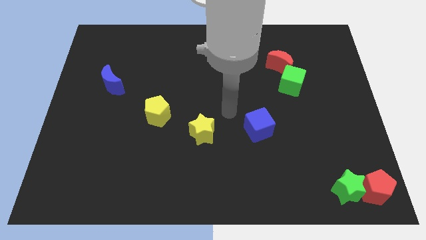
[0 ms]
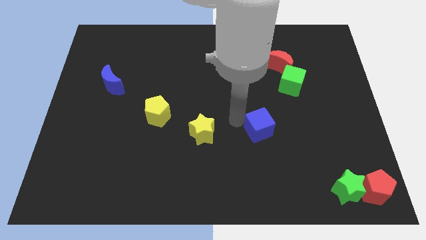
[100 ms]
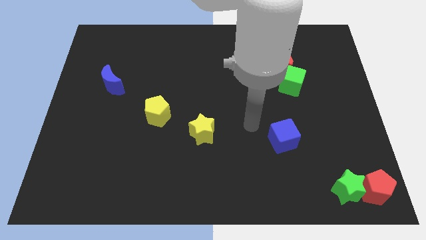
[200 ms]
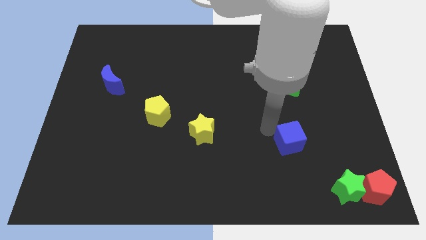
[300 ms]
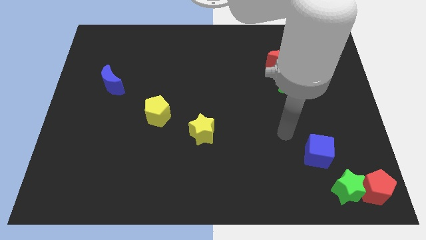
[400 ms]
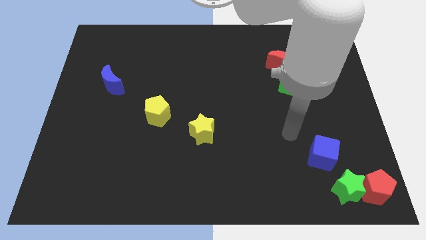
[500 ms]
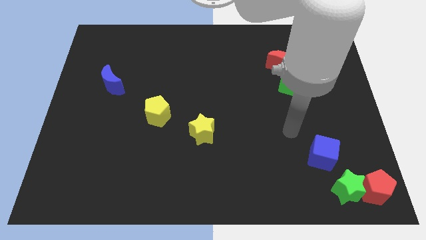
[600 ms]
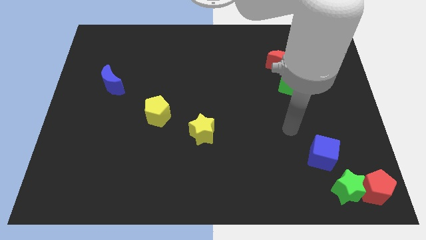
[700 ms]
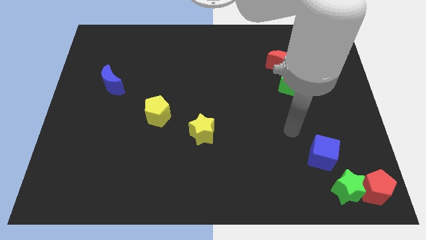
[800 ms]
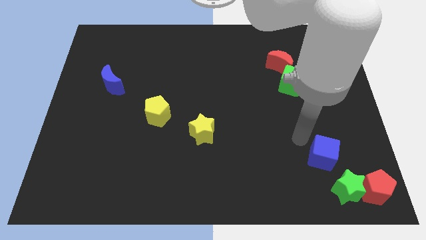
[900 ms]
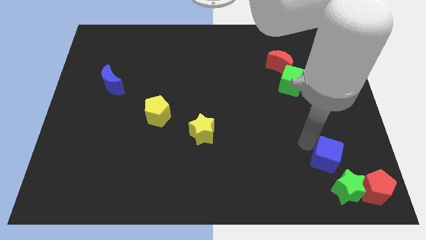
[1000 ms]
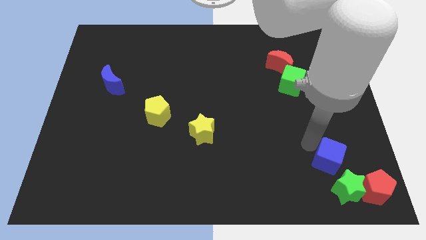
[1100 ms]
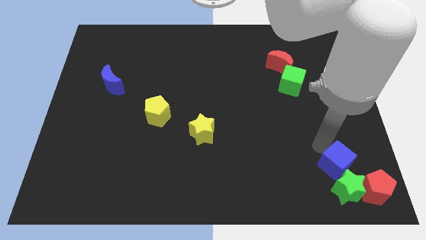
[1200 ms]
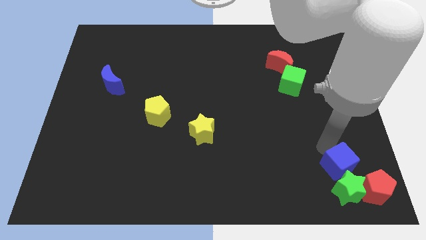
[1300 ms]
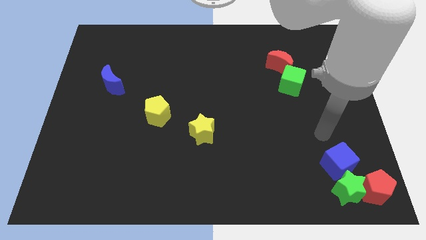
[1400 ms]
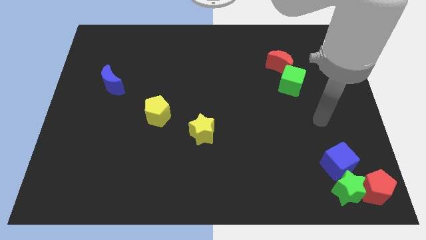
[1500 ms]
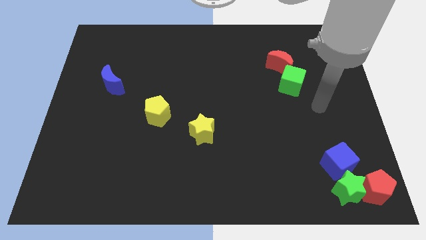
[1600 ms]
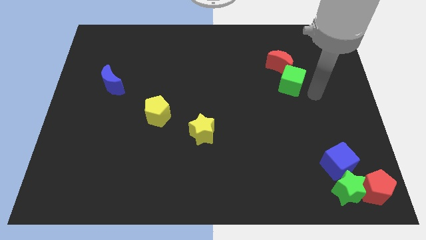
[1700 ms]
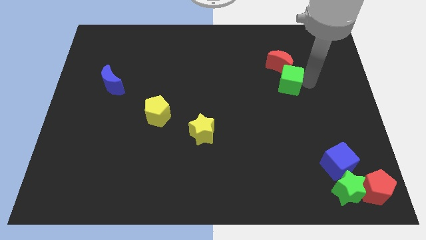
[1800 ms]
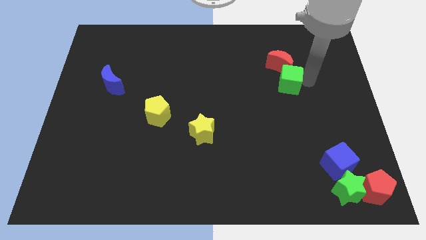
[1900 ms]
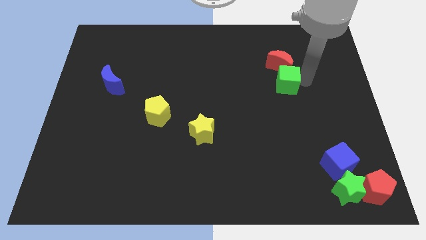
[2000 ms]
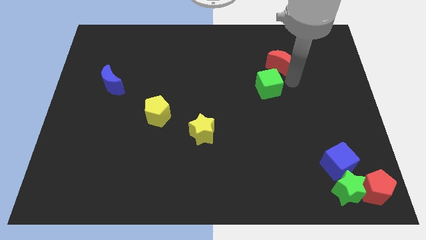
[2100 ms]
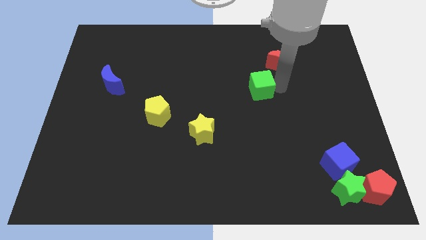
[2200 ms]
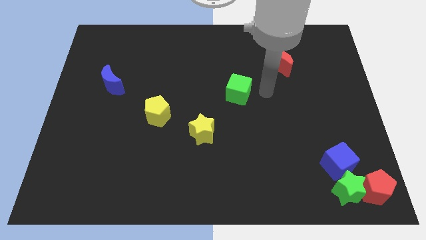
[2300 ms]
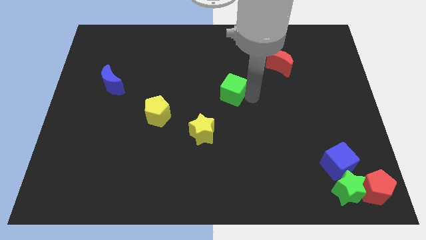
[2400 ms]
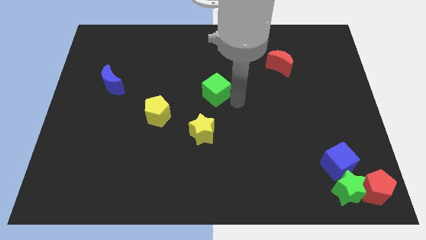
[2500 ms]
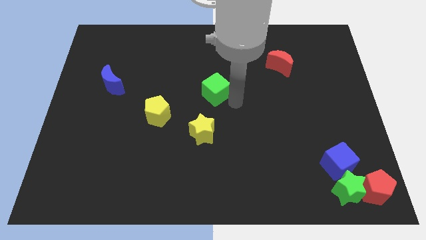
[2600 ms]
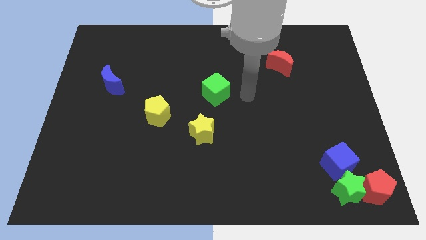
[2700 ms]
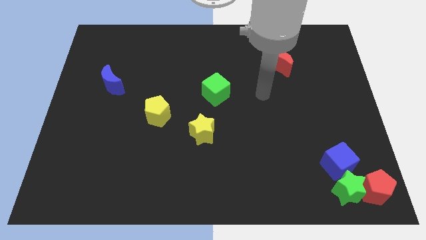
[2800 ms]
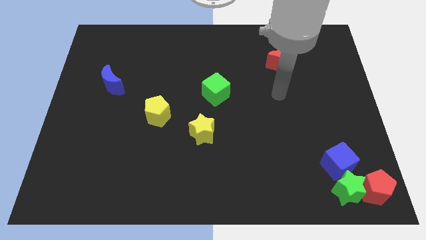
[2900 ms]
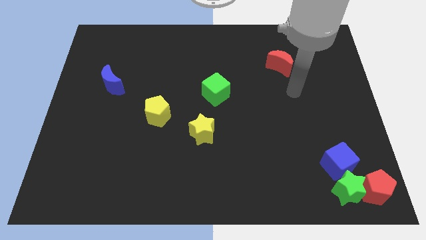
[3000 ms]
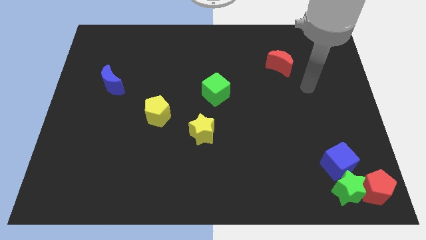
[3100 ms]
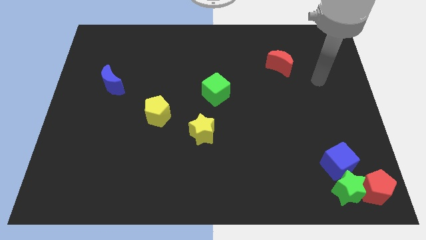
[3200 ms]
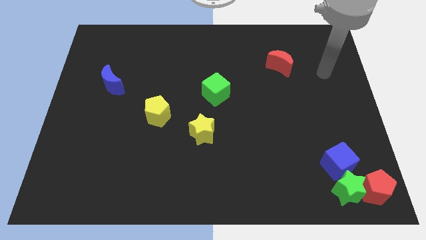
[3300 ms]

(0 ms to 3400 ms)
slide the green cube to the diagonal of blue cube

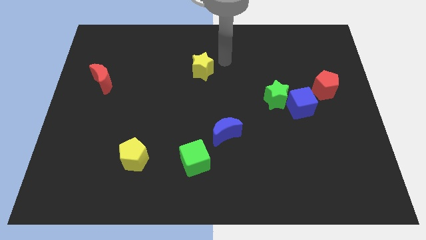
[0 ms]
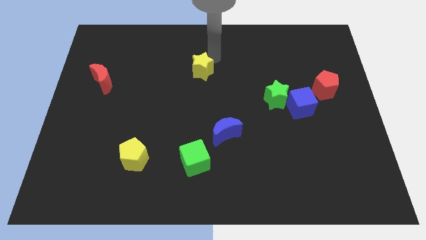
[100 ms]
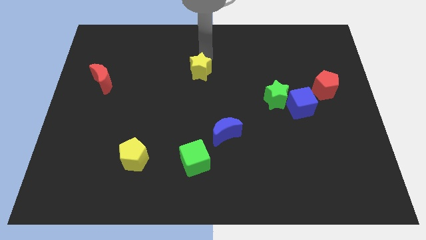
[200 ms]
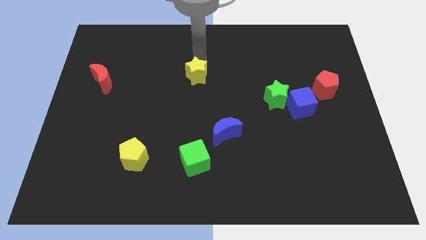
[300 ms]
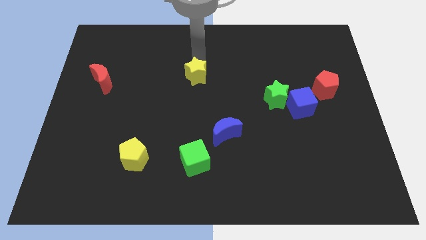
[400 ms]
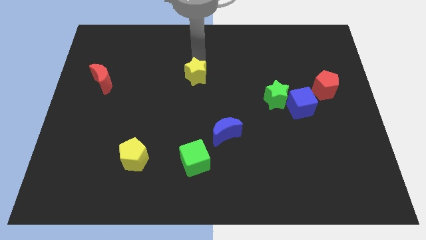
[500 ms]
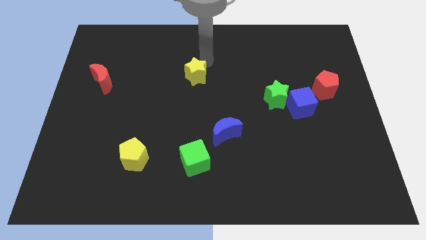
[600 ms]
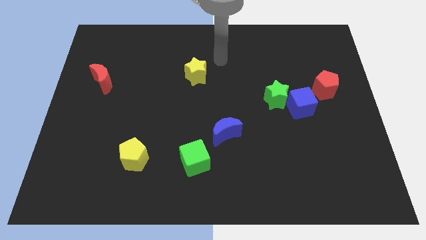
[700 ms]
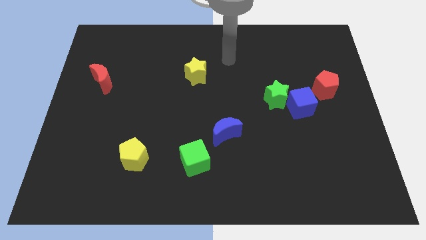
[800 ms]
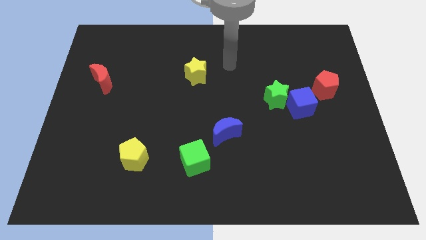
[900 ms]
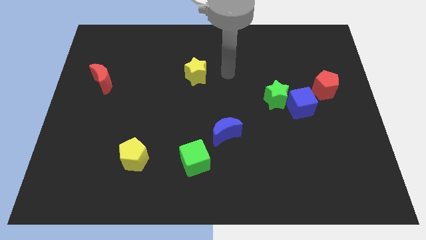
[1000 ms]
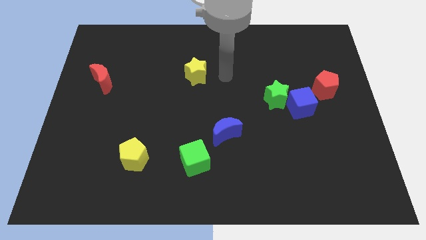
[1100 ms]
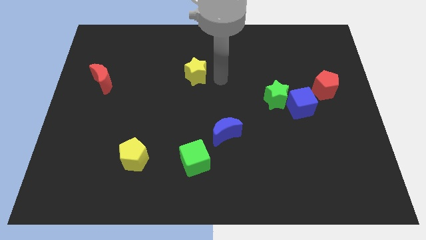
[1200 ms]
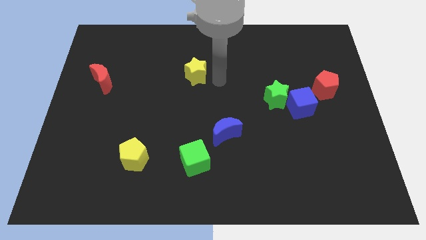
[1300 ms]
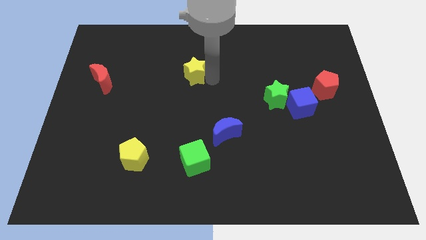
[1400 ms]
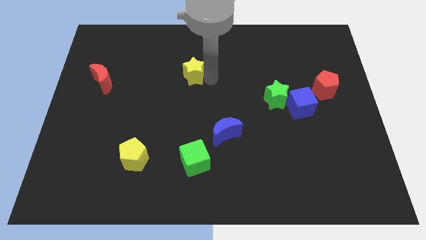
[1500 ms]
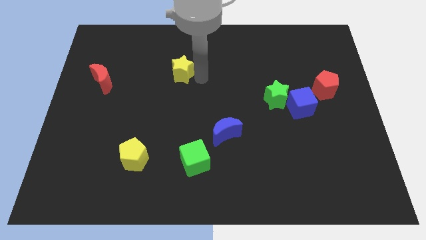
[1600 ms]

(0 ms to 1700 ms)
push the yellow star diagonally on the top left side of the blue crescent

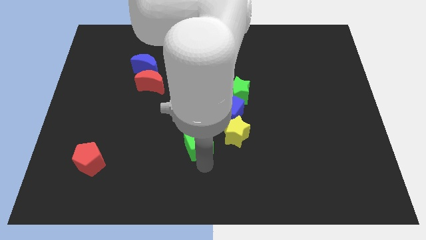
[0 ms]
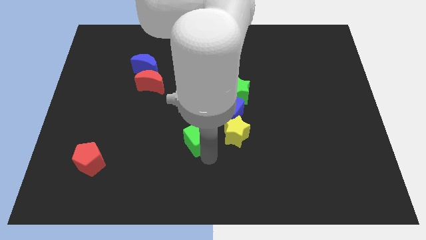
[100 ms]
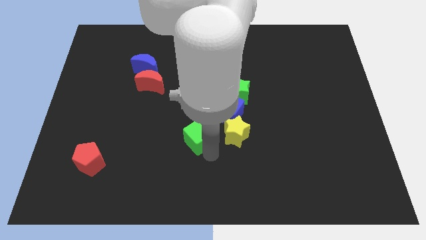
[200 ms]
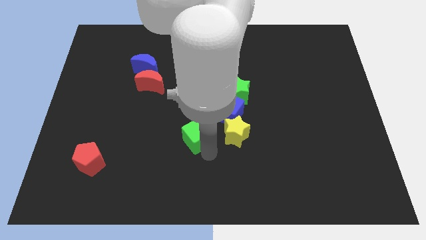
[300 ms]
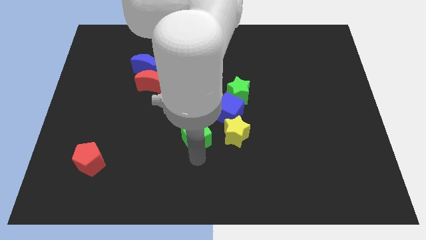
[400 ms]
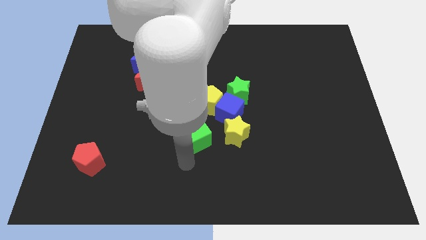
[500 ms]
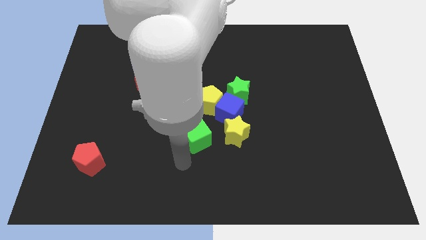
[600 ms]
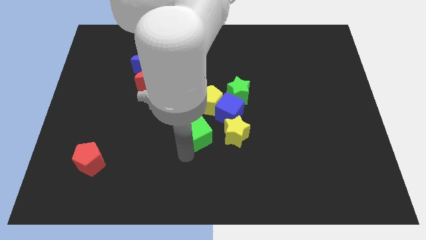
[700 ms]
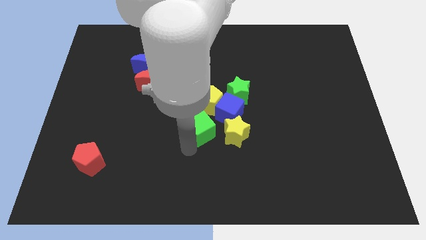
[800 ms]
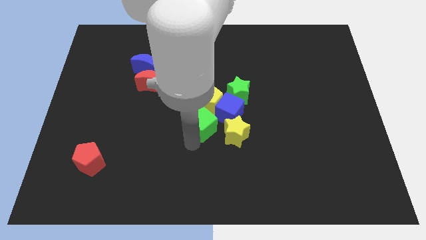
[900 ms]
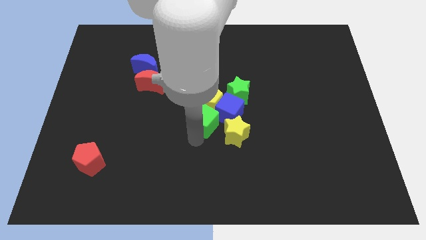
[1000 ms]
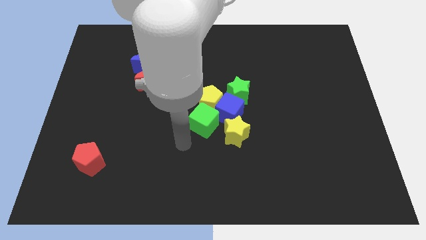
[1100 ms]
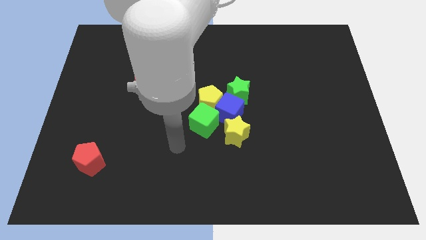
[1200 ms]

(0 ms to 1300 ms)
move green cube diagonally below the blue cube

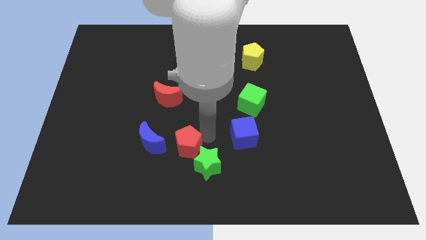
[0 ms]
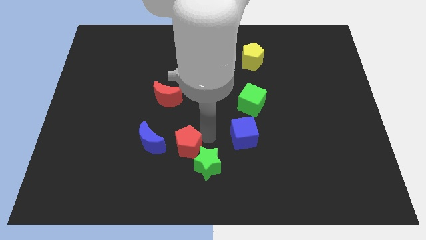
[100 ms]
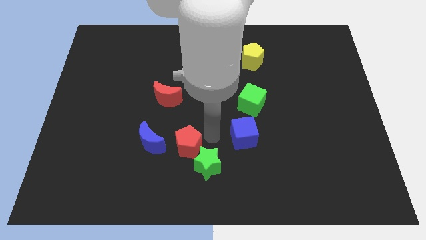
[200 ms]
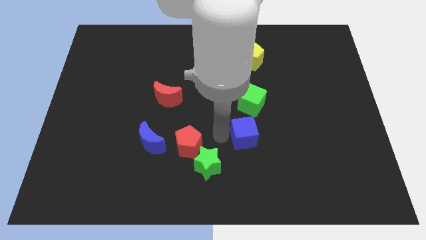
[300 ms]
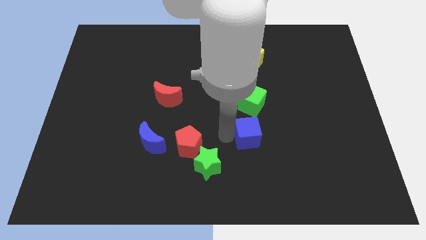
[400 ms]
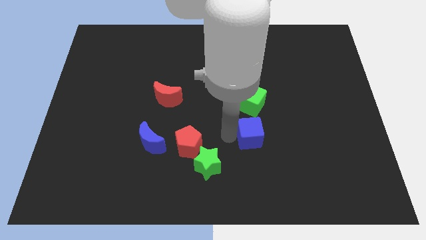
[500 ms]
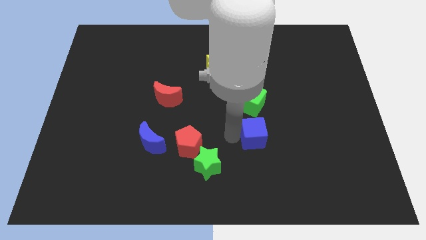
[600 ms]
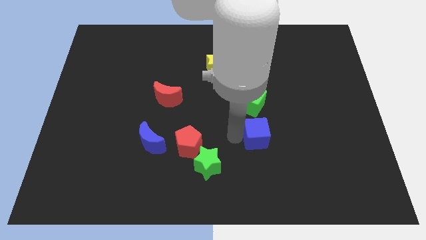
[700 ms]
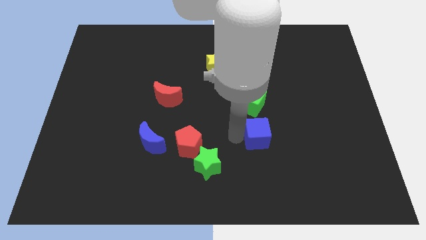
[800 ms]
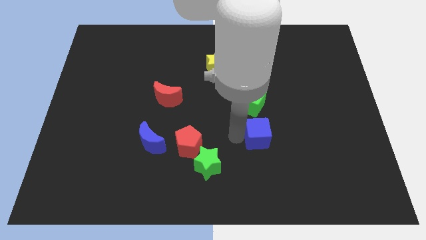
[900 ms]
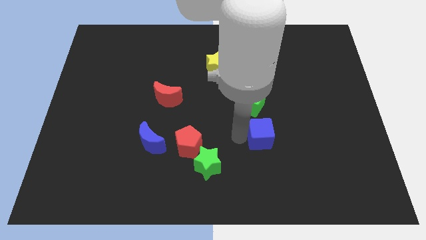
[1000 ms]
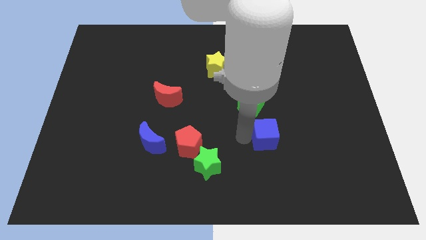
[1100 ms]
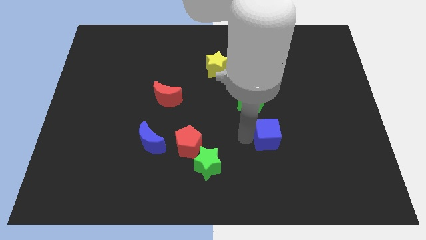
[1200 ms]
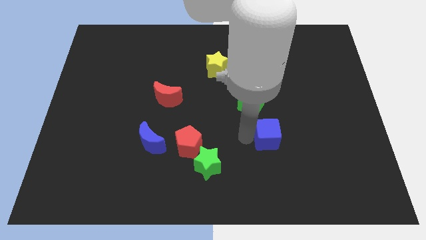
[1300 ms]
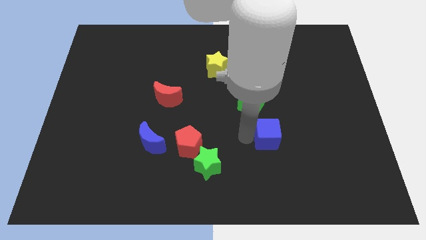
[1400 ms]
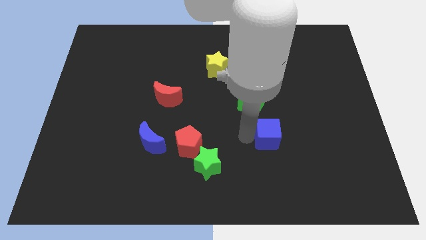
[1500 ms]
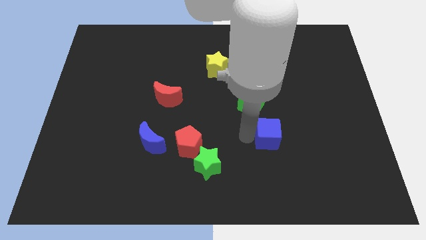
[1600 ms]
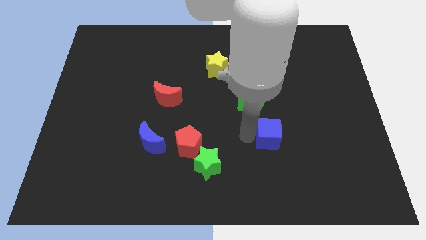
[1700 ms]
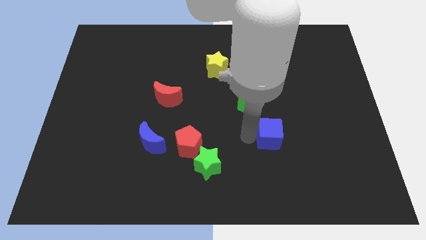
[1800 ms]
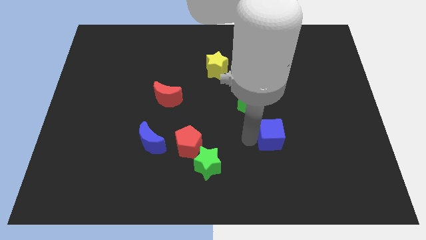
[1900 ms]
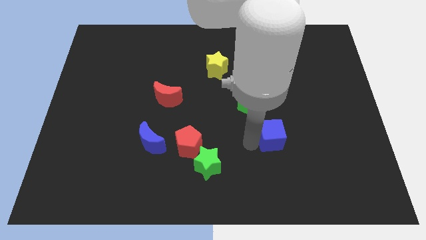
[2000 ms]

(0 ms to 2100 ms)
move the blue cube to the right side

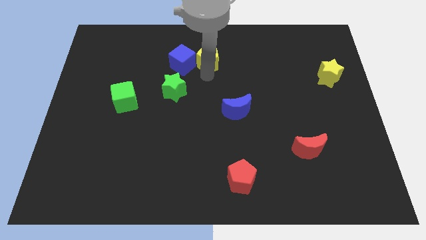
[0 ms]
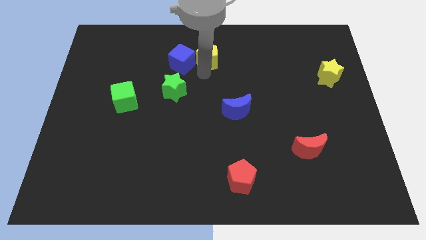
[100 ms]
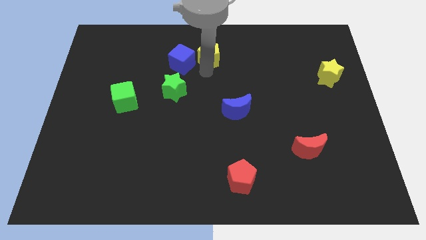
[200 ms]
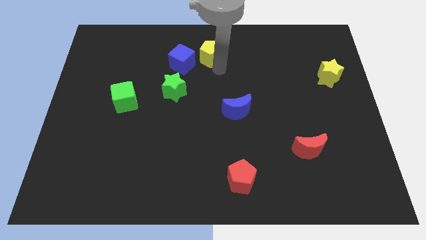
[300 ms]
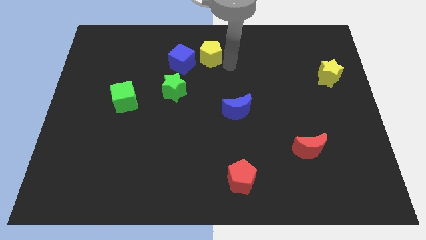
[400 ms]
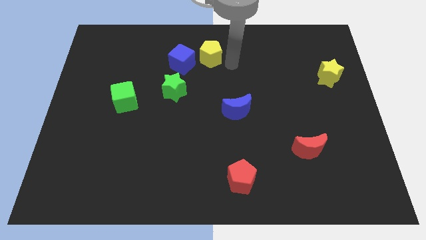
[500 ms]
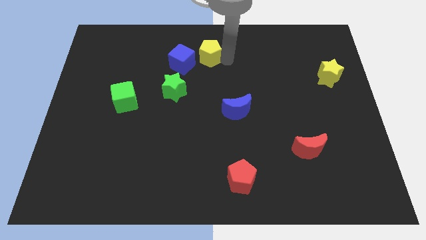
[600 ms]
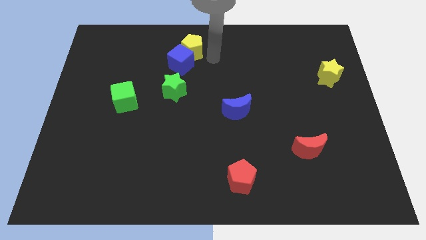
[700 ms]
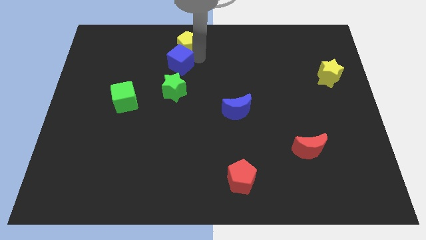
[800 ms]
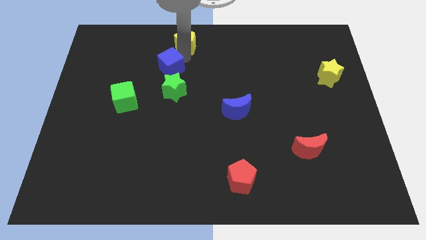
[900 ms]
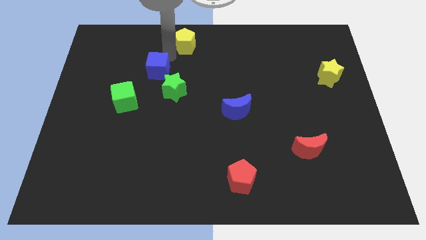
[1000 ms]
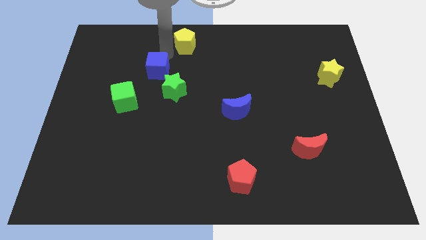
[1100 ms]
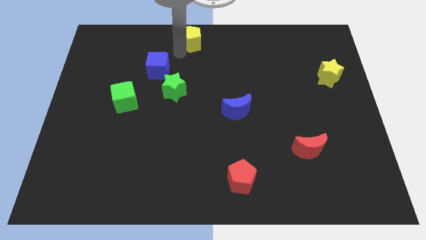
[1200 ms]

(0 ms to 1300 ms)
separate the blue cube from the yellow pentagon
